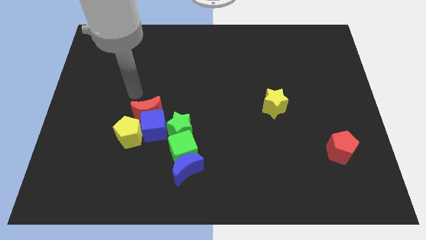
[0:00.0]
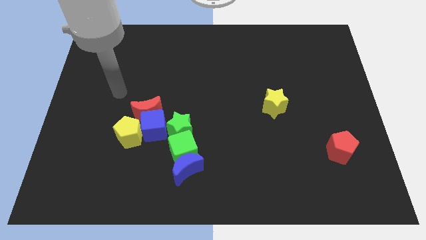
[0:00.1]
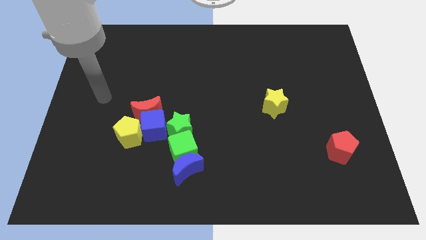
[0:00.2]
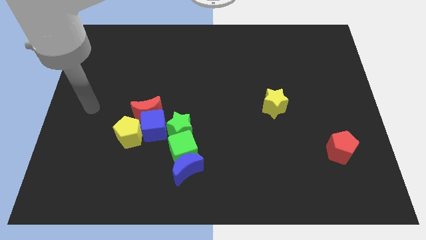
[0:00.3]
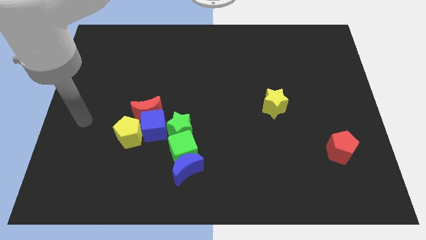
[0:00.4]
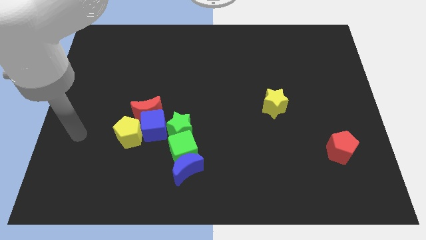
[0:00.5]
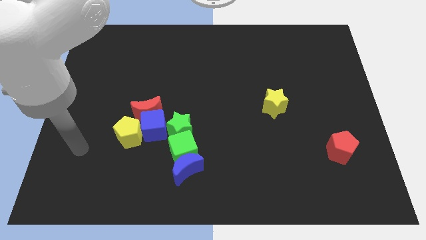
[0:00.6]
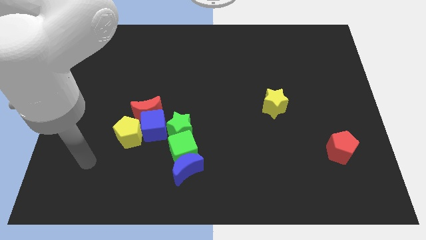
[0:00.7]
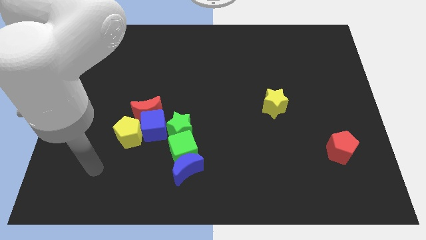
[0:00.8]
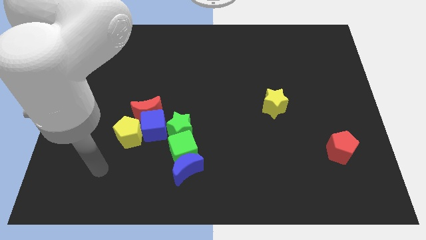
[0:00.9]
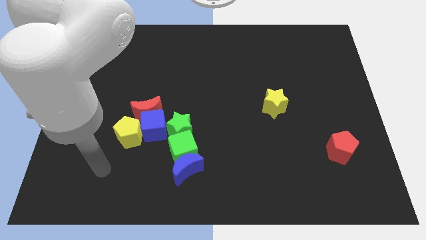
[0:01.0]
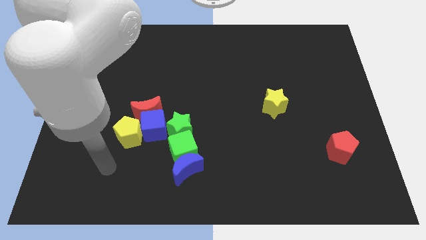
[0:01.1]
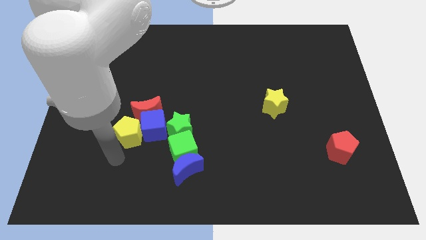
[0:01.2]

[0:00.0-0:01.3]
point your arm at the bottom left of the yellow pentagon

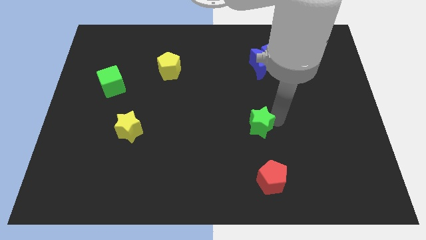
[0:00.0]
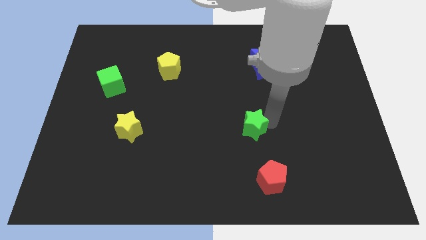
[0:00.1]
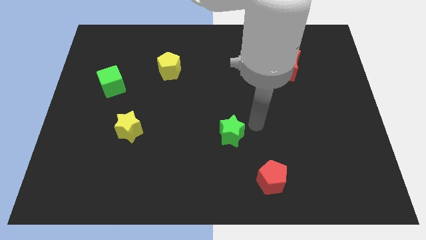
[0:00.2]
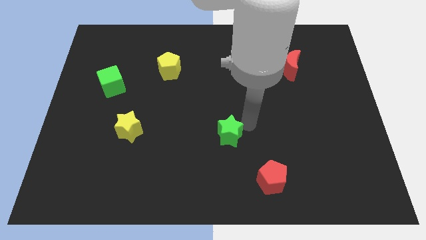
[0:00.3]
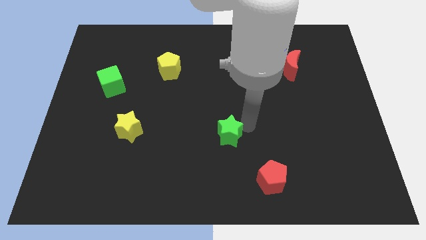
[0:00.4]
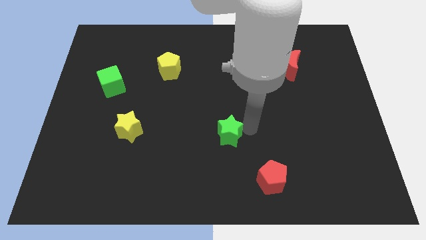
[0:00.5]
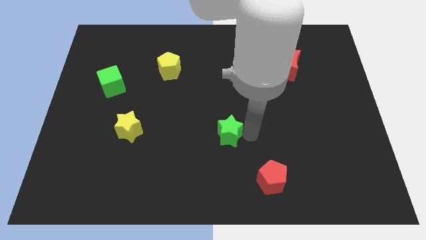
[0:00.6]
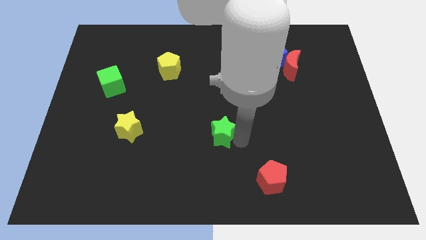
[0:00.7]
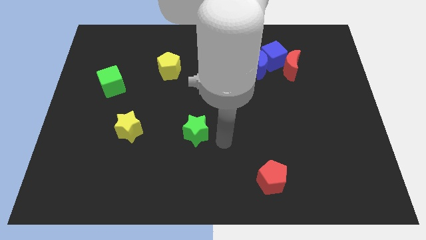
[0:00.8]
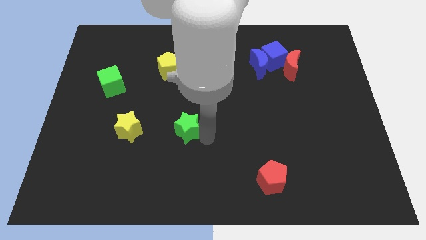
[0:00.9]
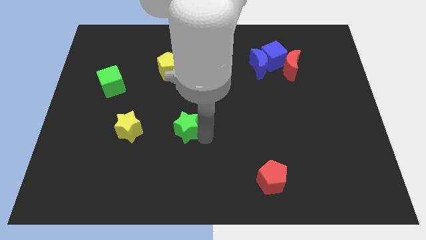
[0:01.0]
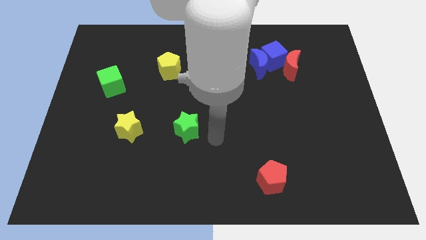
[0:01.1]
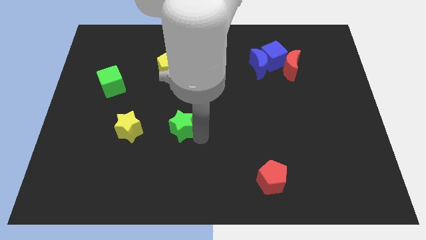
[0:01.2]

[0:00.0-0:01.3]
place green star parallel to yellow star

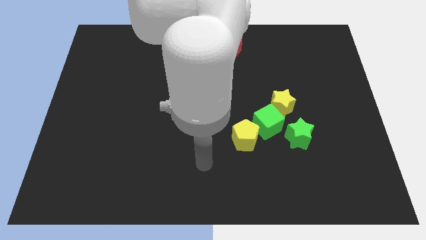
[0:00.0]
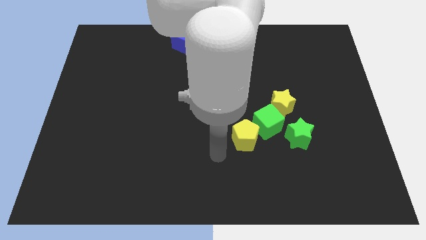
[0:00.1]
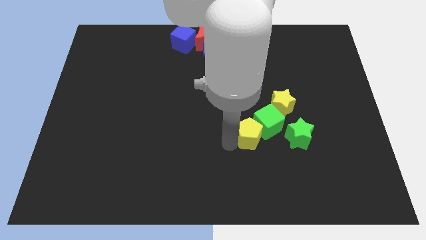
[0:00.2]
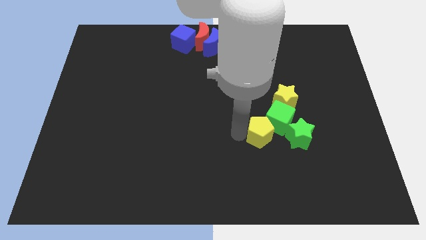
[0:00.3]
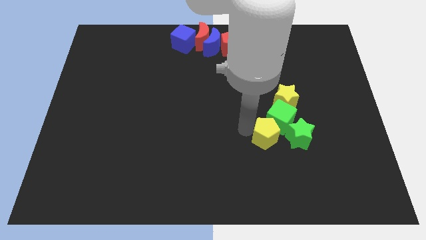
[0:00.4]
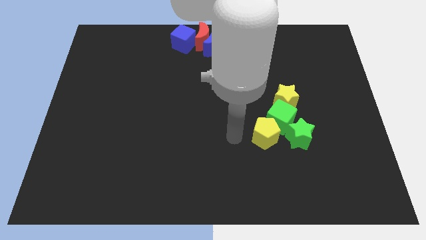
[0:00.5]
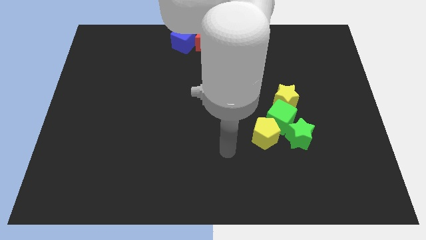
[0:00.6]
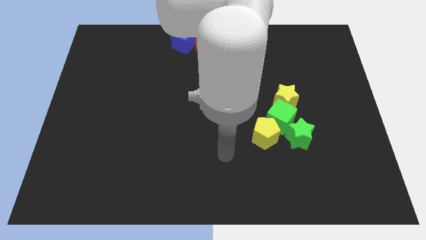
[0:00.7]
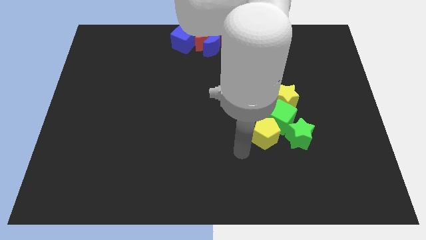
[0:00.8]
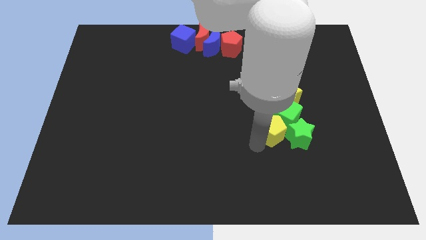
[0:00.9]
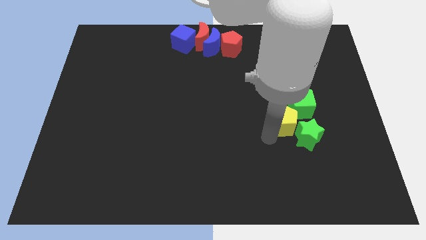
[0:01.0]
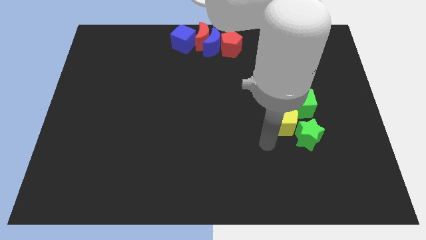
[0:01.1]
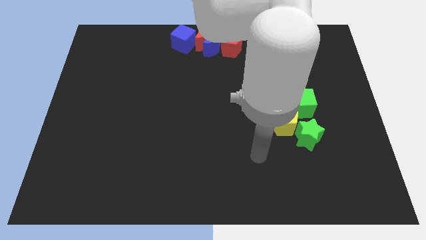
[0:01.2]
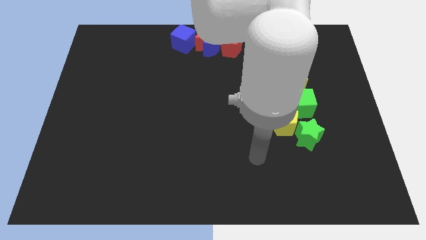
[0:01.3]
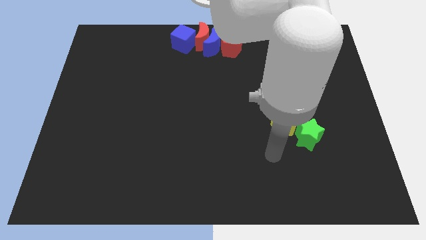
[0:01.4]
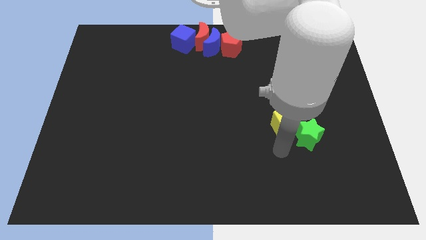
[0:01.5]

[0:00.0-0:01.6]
push the green cube with the yellow pentagon

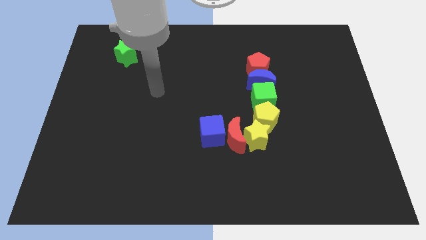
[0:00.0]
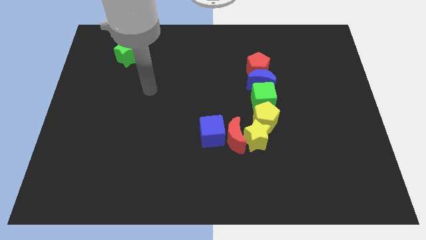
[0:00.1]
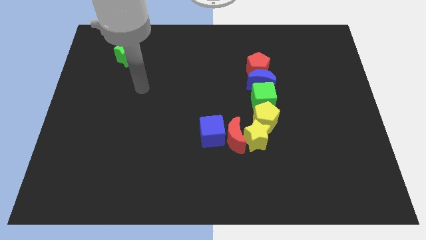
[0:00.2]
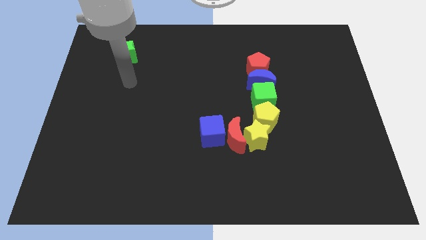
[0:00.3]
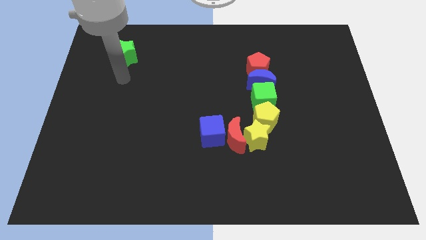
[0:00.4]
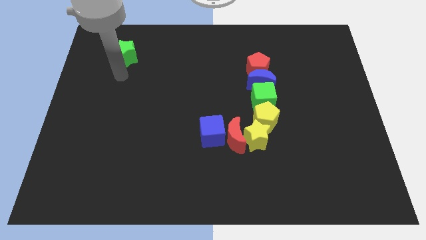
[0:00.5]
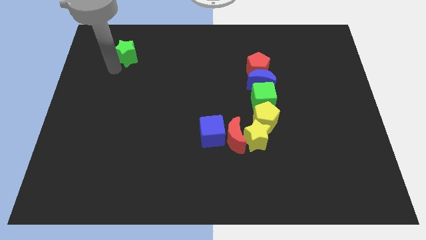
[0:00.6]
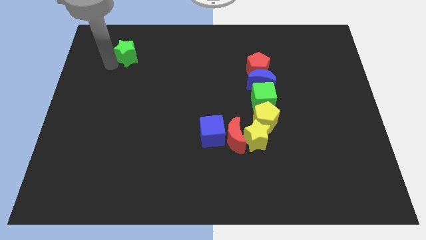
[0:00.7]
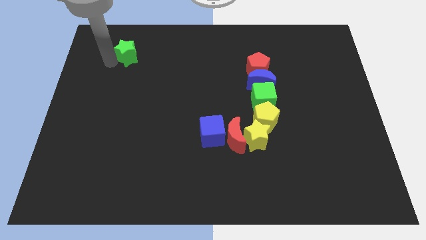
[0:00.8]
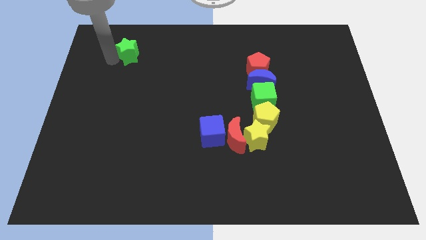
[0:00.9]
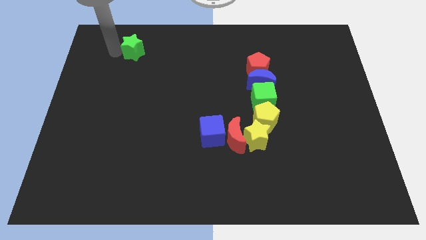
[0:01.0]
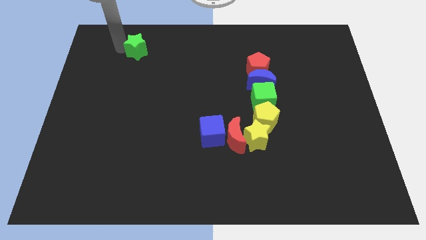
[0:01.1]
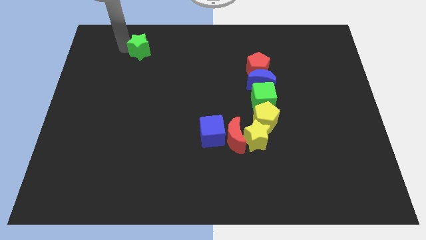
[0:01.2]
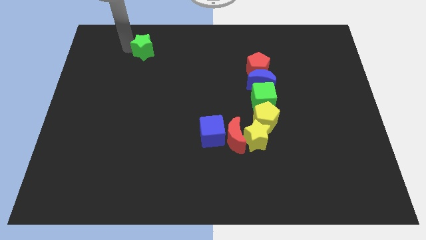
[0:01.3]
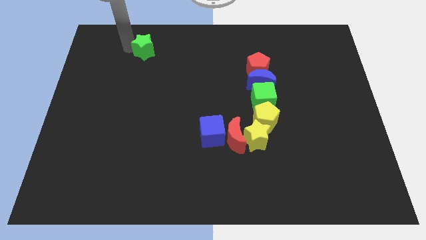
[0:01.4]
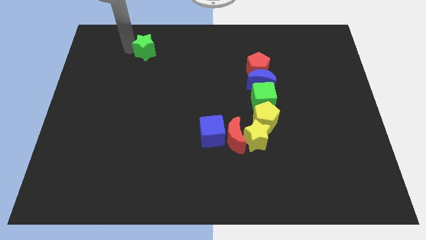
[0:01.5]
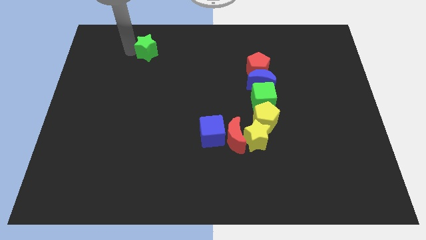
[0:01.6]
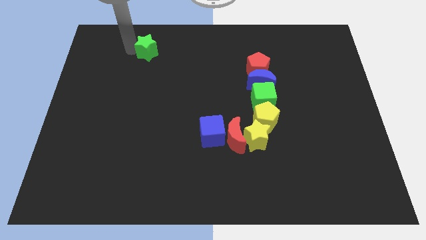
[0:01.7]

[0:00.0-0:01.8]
drag the green star to the right side of the board

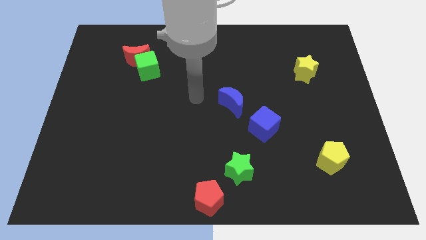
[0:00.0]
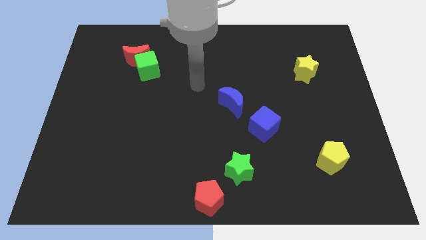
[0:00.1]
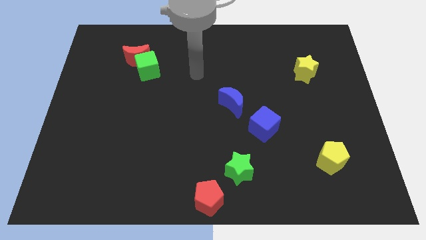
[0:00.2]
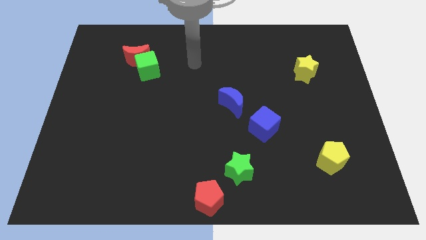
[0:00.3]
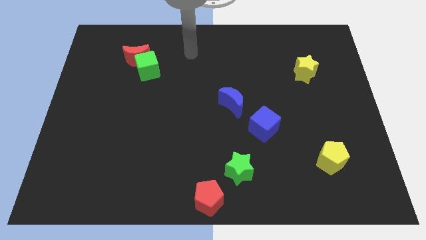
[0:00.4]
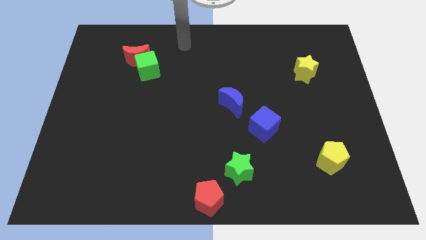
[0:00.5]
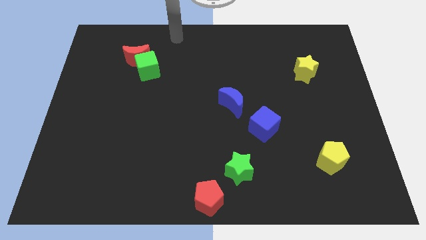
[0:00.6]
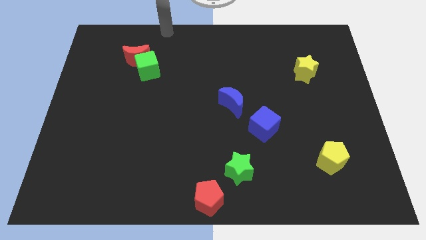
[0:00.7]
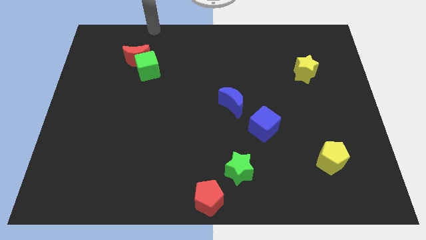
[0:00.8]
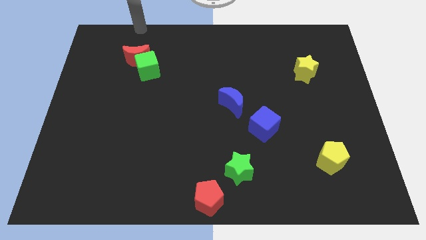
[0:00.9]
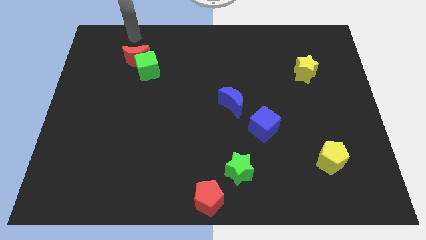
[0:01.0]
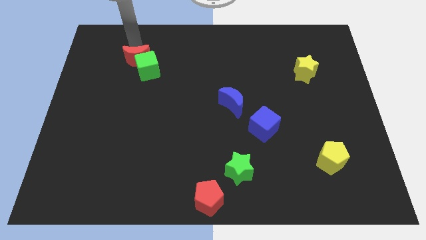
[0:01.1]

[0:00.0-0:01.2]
place your hand at top of the red crescent

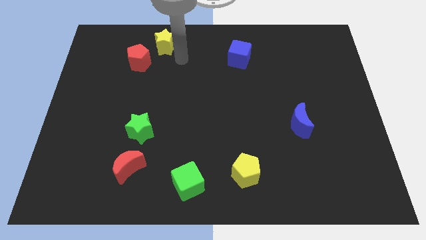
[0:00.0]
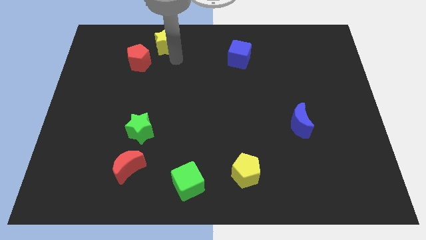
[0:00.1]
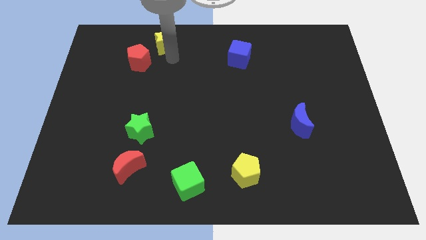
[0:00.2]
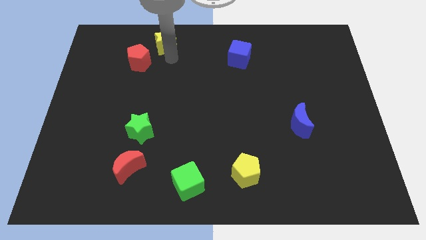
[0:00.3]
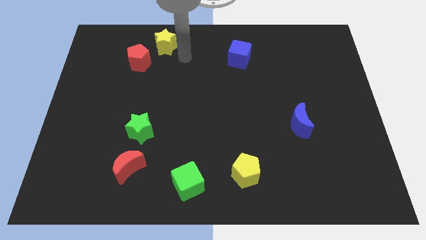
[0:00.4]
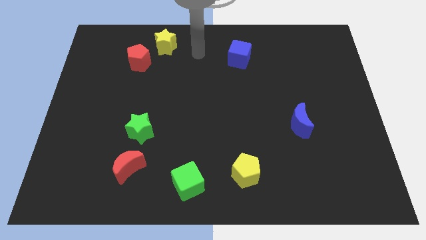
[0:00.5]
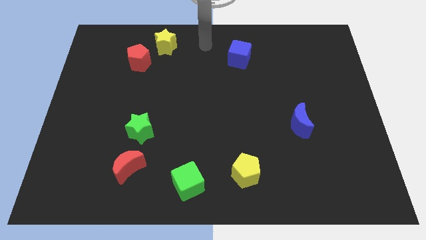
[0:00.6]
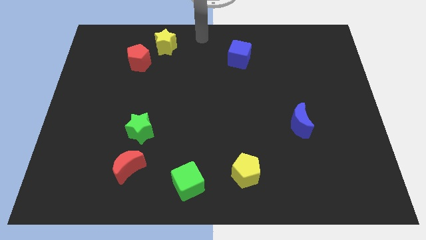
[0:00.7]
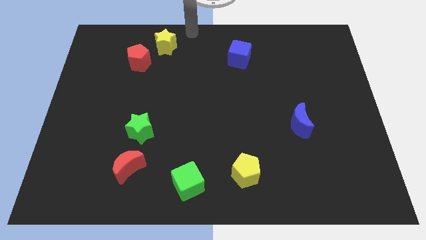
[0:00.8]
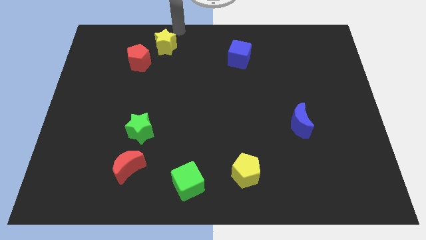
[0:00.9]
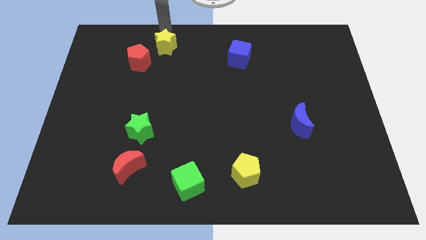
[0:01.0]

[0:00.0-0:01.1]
point your arm at the top of yellow star

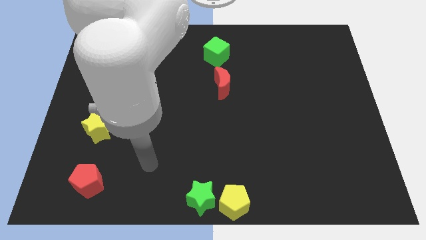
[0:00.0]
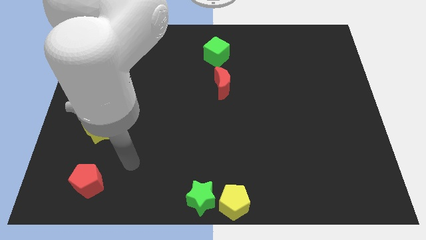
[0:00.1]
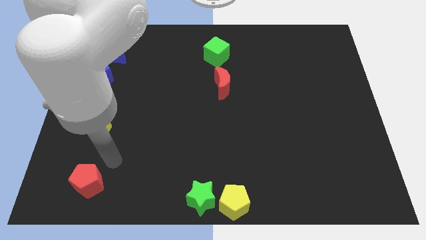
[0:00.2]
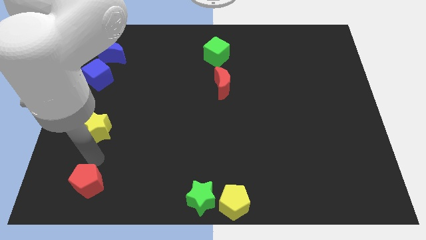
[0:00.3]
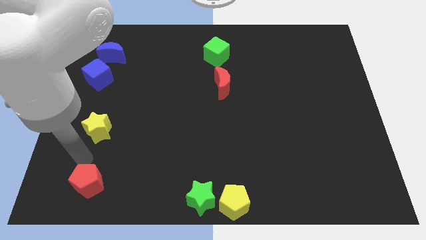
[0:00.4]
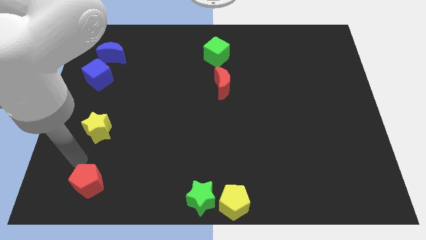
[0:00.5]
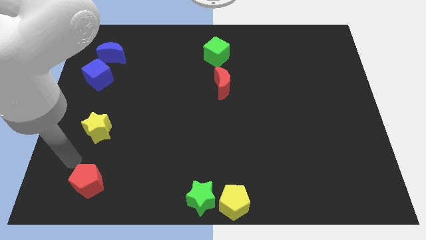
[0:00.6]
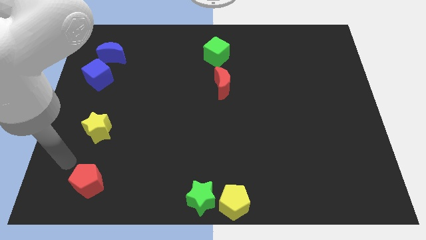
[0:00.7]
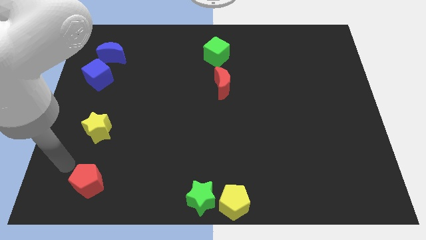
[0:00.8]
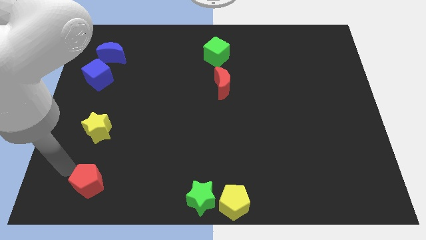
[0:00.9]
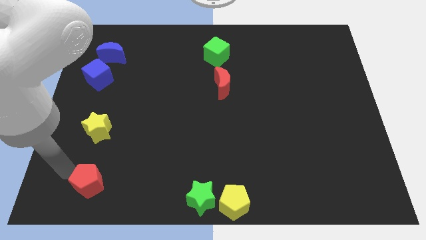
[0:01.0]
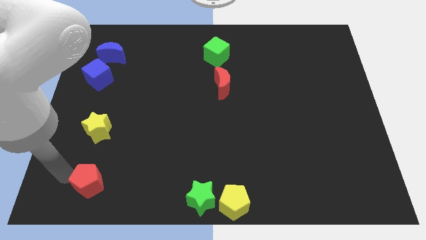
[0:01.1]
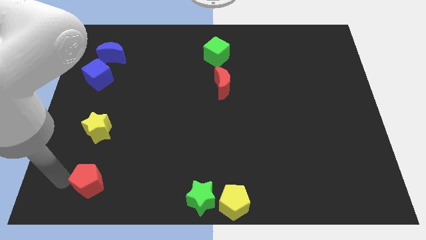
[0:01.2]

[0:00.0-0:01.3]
point your arm left to red pentagon
